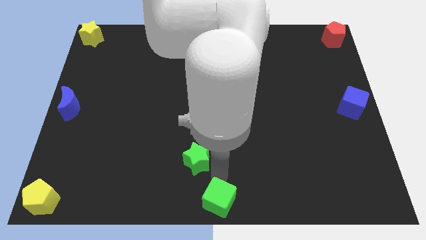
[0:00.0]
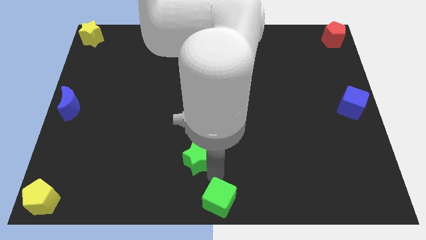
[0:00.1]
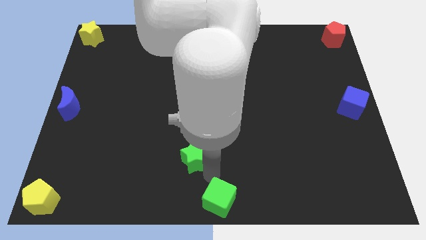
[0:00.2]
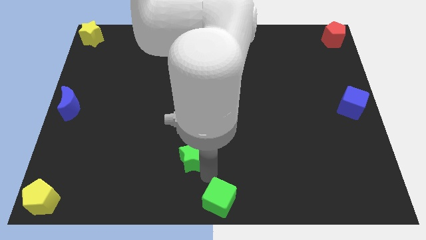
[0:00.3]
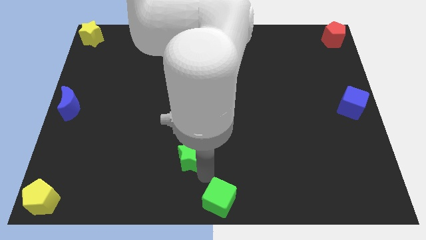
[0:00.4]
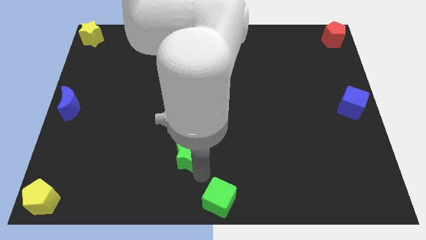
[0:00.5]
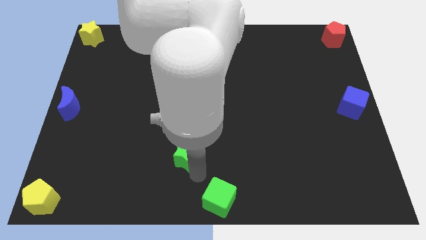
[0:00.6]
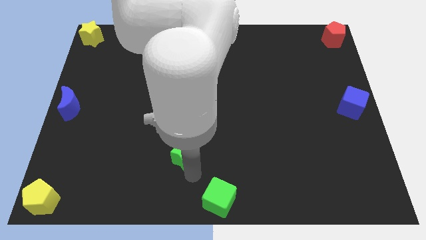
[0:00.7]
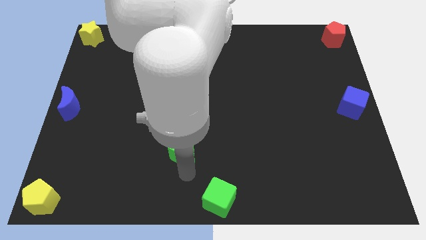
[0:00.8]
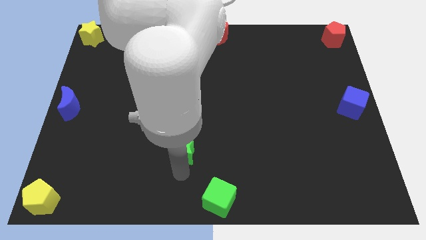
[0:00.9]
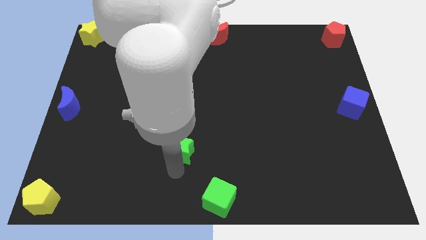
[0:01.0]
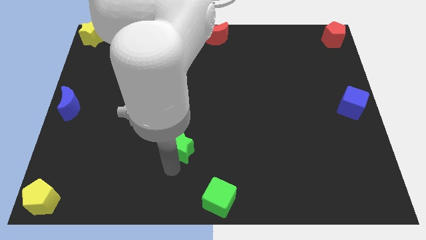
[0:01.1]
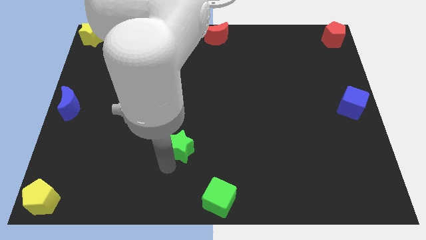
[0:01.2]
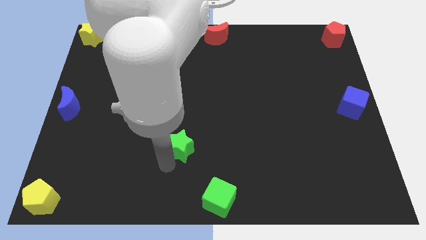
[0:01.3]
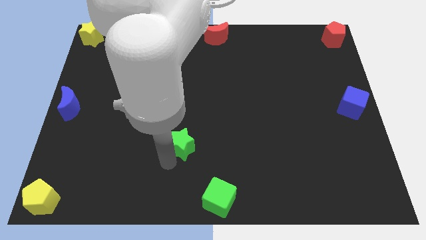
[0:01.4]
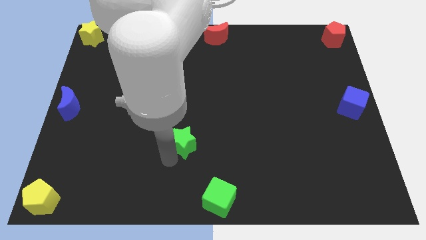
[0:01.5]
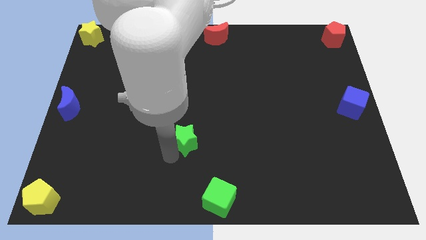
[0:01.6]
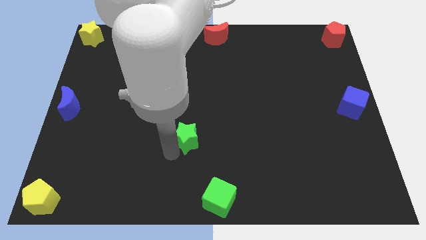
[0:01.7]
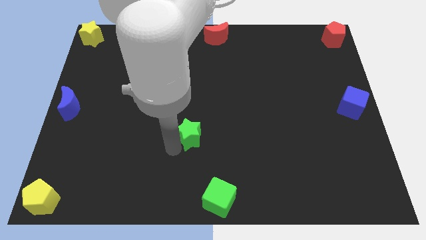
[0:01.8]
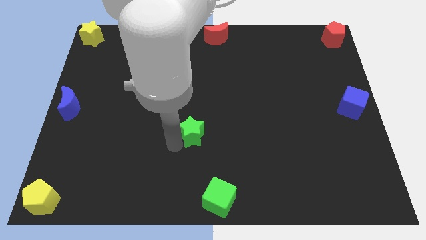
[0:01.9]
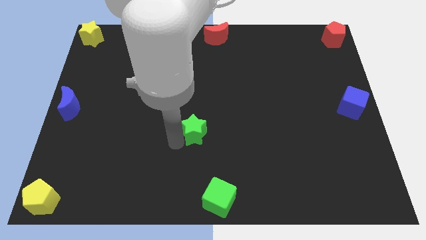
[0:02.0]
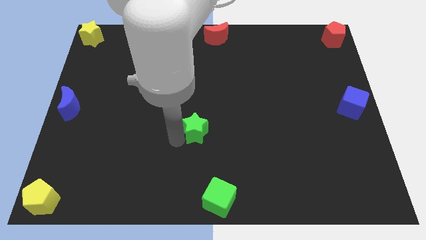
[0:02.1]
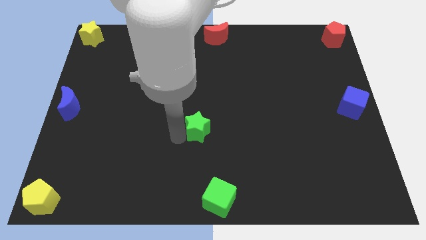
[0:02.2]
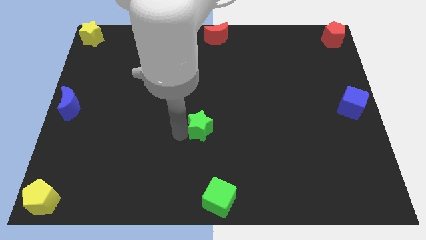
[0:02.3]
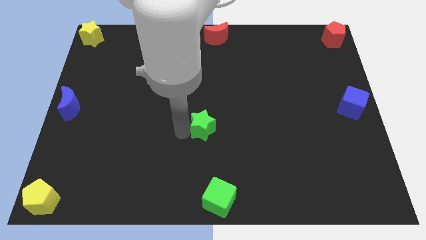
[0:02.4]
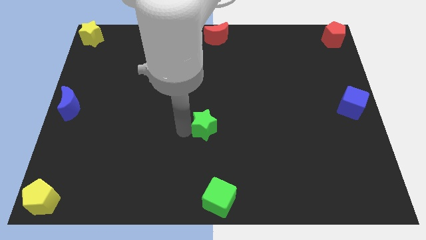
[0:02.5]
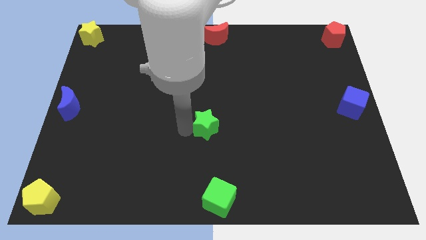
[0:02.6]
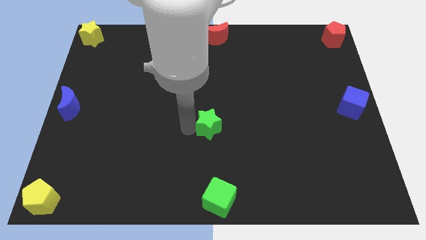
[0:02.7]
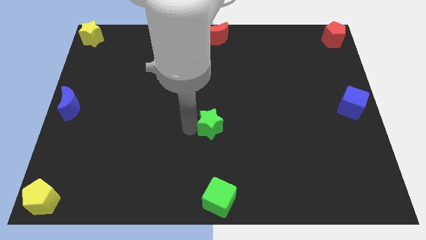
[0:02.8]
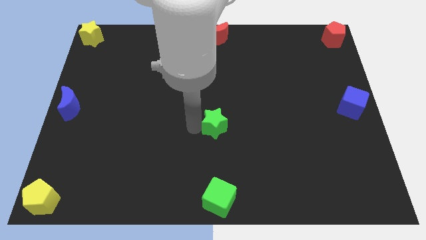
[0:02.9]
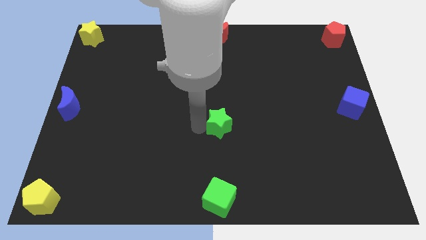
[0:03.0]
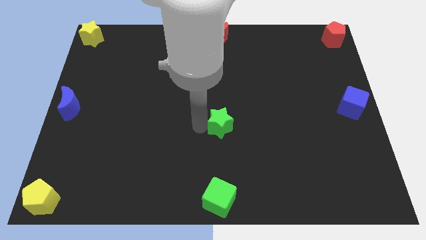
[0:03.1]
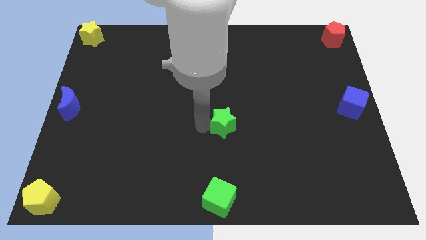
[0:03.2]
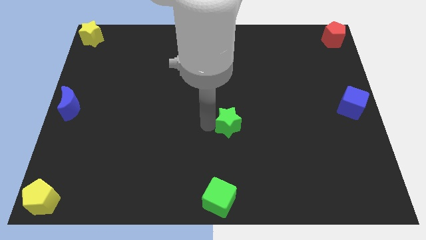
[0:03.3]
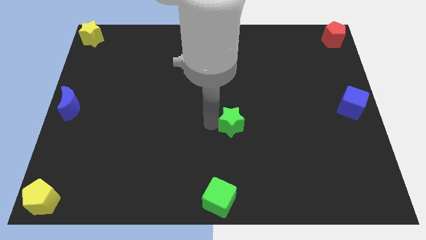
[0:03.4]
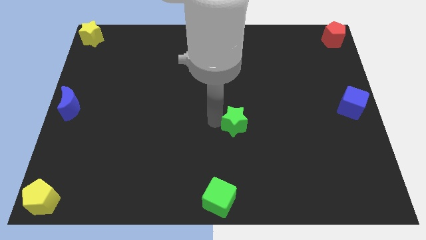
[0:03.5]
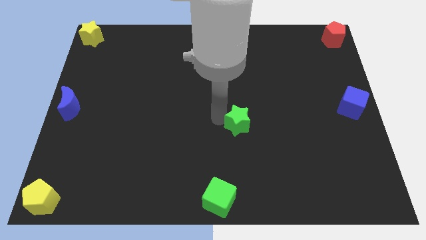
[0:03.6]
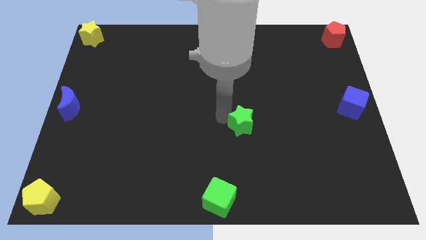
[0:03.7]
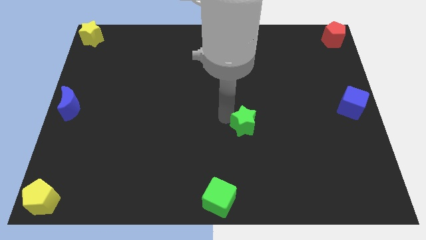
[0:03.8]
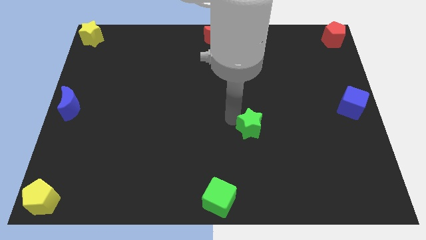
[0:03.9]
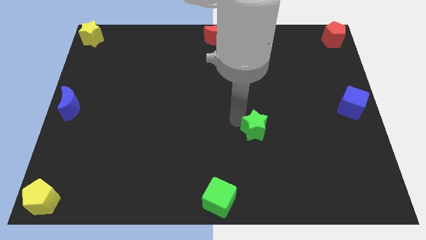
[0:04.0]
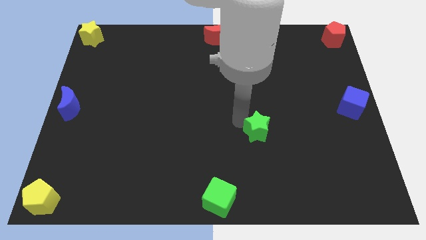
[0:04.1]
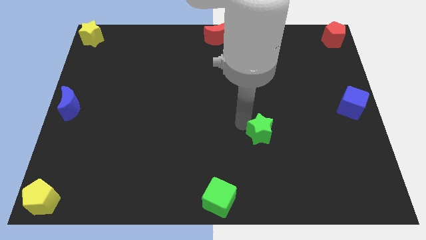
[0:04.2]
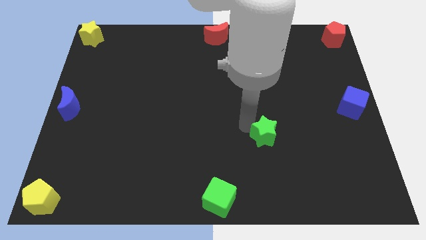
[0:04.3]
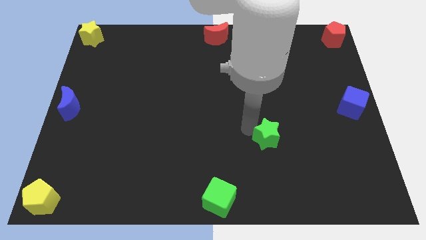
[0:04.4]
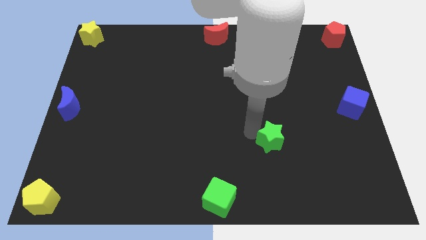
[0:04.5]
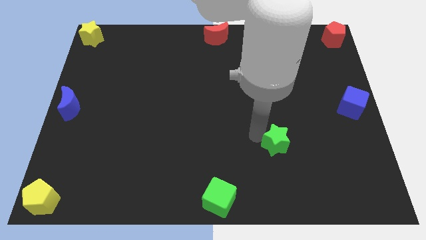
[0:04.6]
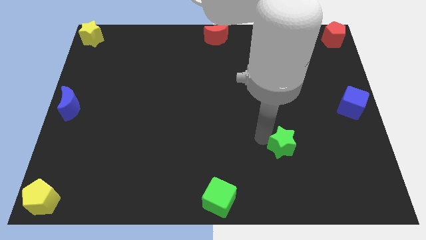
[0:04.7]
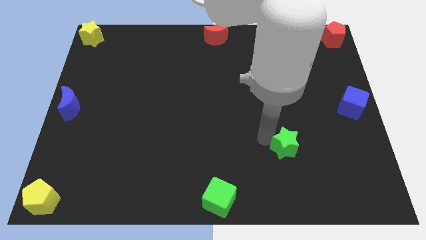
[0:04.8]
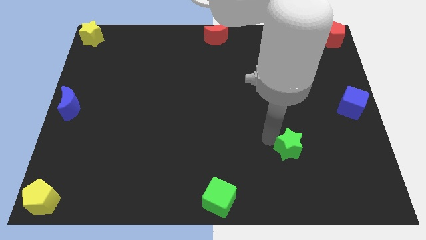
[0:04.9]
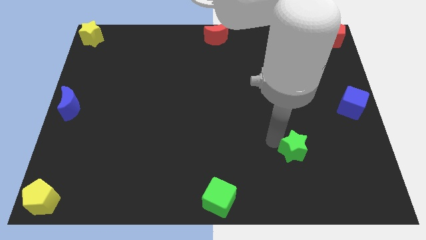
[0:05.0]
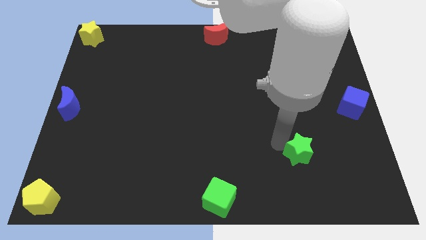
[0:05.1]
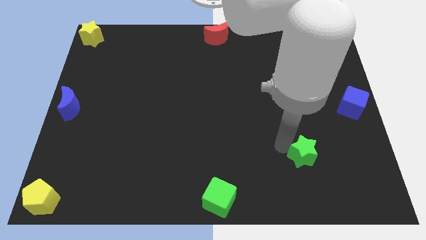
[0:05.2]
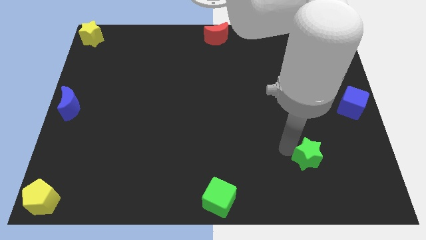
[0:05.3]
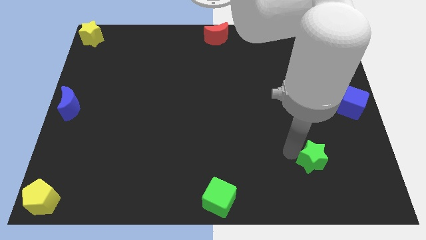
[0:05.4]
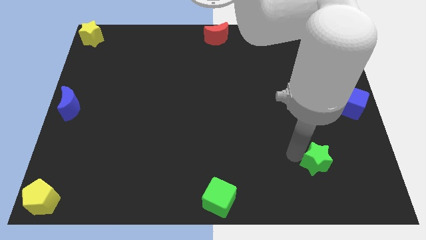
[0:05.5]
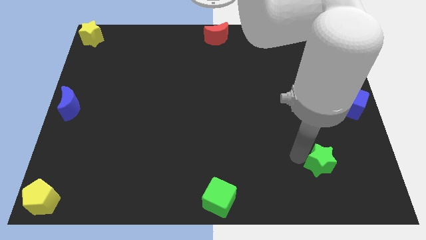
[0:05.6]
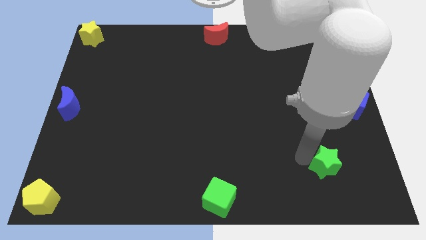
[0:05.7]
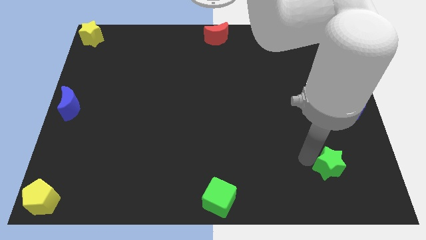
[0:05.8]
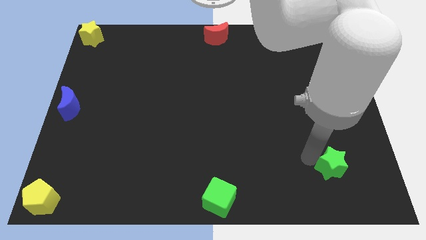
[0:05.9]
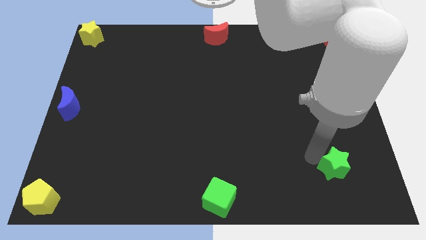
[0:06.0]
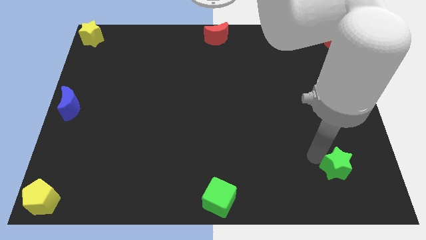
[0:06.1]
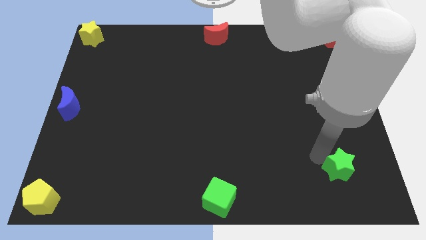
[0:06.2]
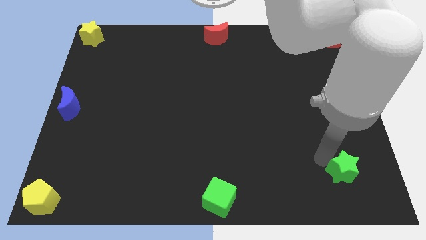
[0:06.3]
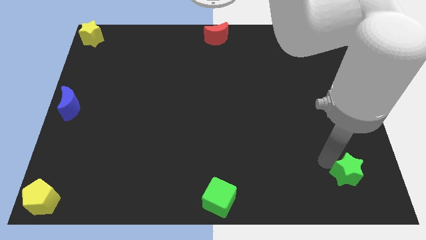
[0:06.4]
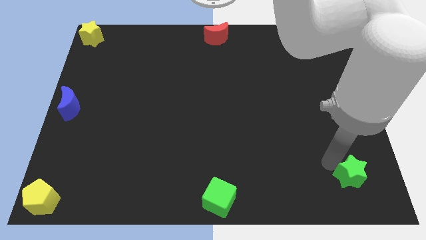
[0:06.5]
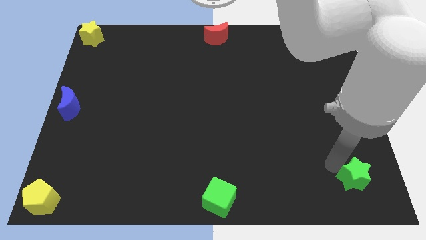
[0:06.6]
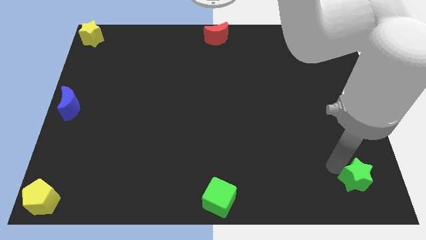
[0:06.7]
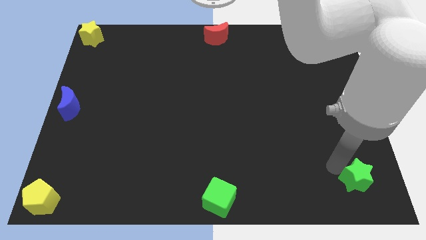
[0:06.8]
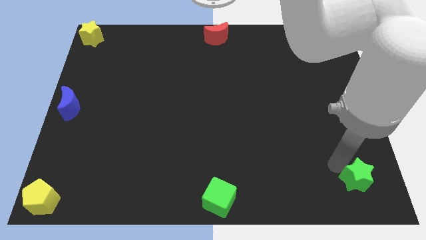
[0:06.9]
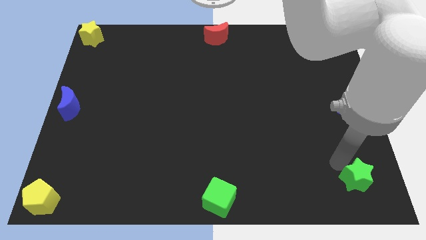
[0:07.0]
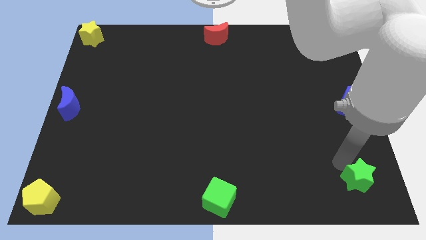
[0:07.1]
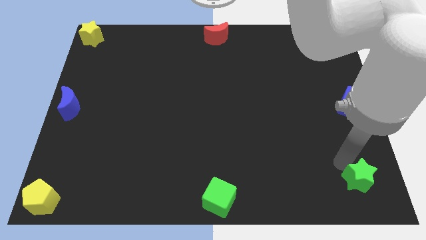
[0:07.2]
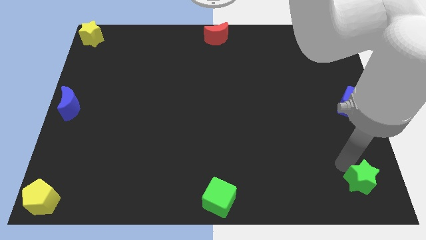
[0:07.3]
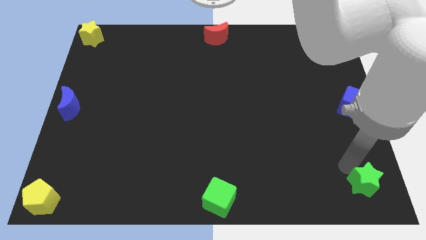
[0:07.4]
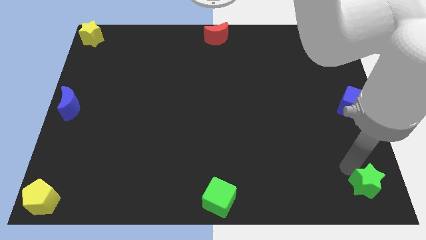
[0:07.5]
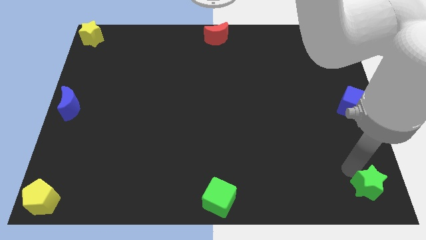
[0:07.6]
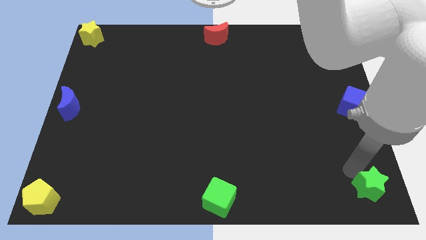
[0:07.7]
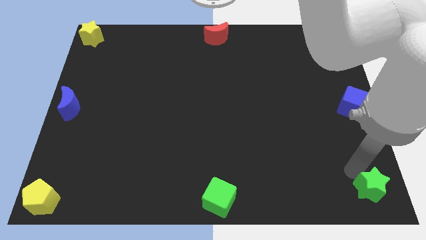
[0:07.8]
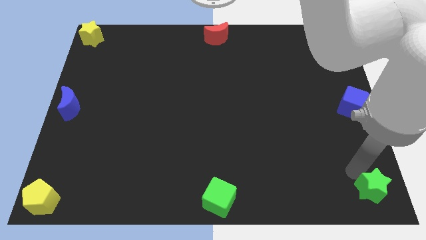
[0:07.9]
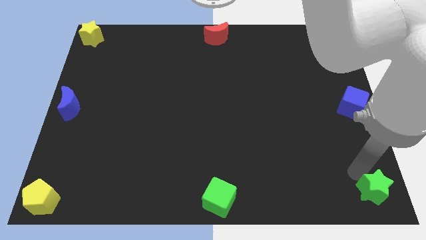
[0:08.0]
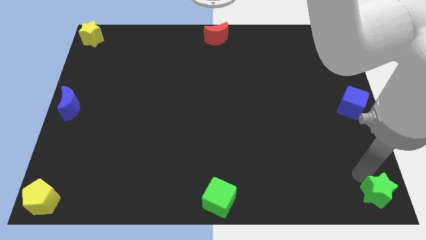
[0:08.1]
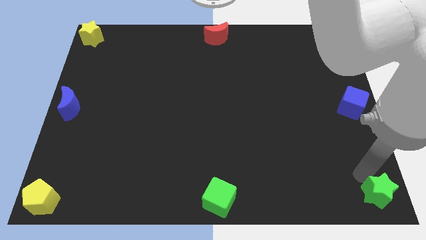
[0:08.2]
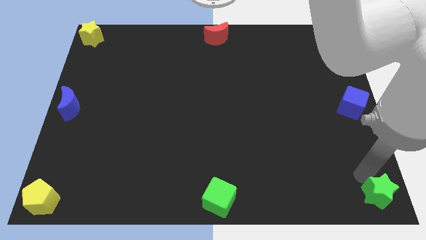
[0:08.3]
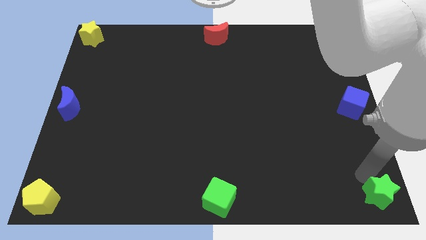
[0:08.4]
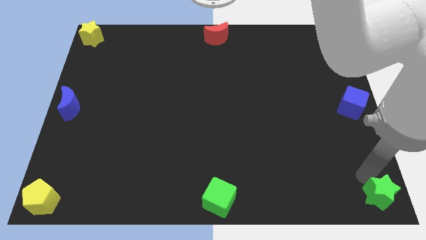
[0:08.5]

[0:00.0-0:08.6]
push the green star bottom right to the board

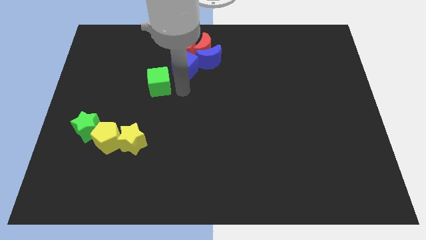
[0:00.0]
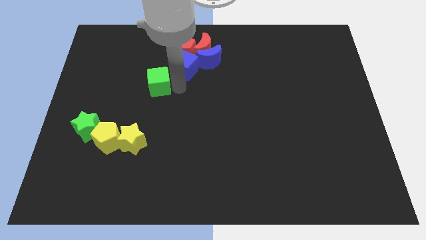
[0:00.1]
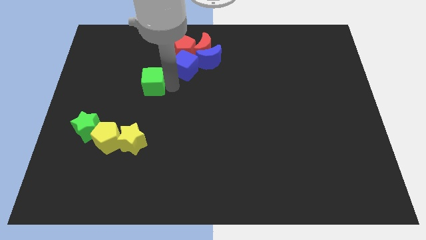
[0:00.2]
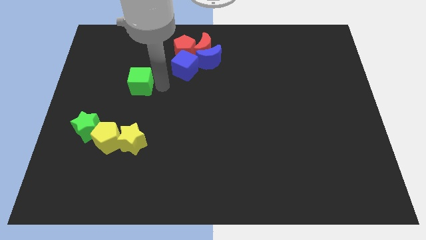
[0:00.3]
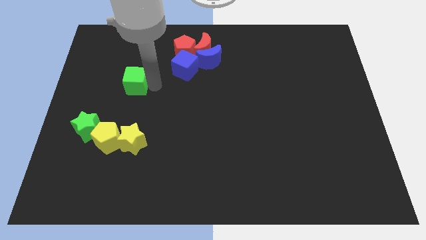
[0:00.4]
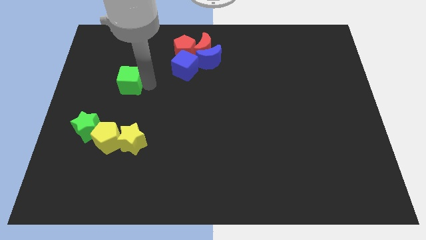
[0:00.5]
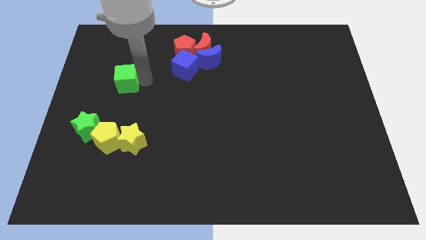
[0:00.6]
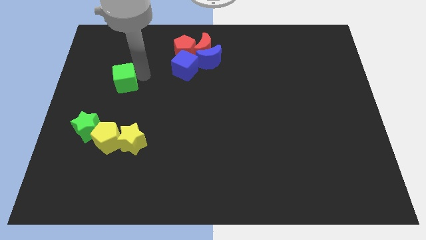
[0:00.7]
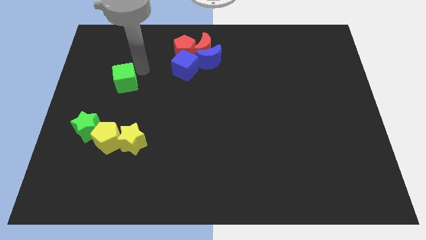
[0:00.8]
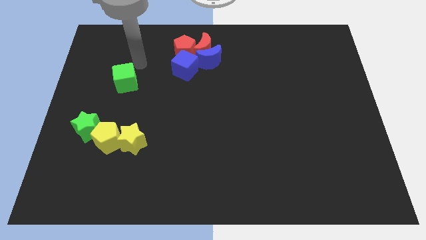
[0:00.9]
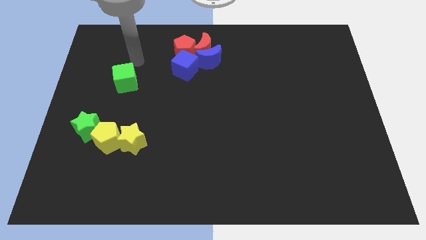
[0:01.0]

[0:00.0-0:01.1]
push the green cube to the left
